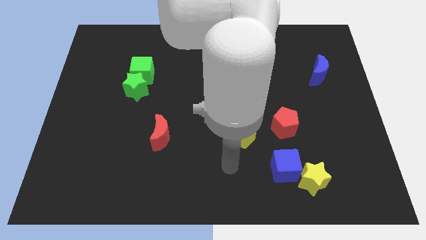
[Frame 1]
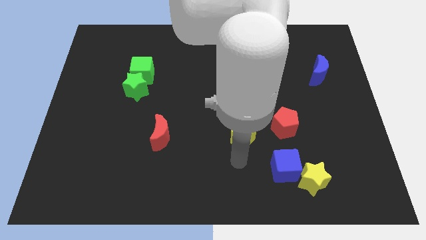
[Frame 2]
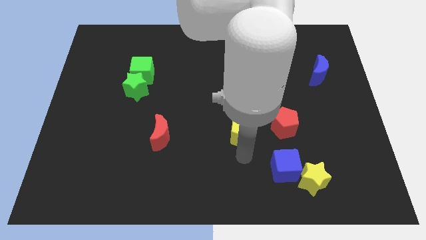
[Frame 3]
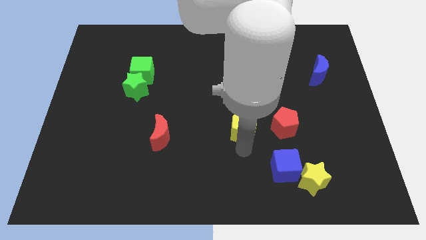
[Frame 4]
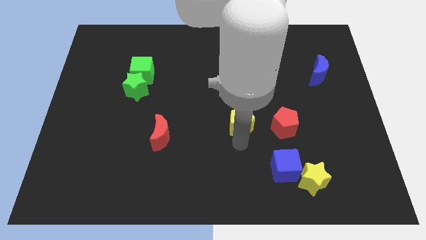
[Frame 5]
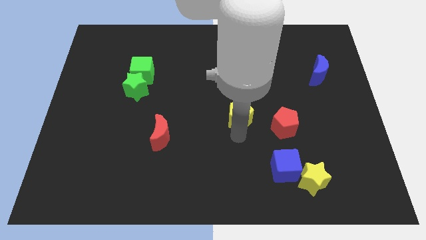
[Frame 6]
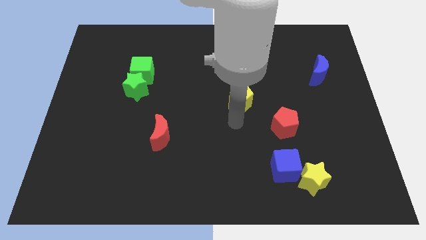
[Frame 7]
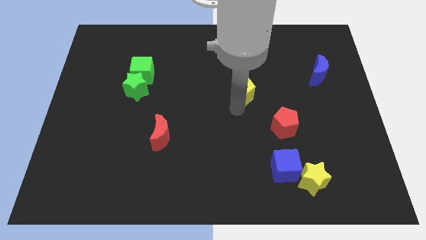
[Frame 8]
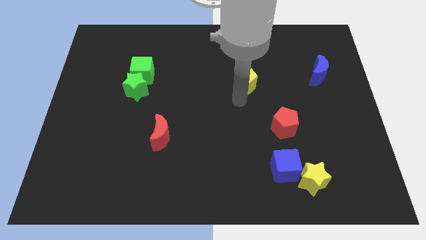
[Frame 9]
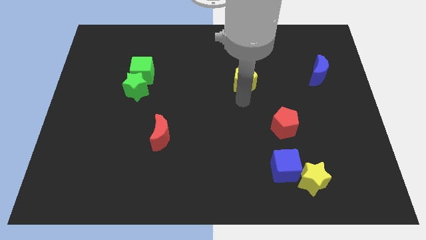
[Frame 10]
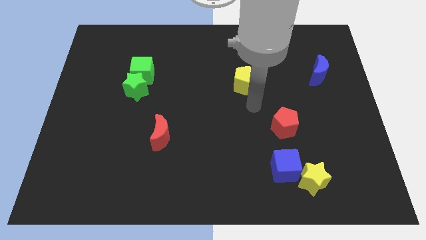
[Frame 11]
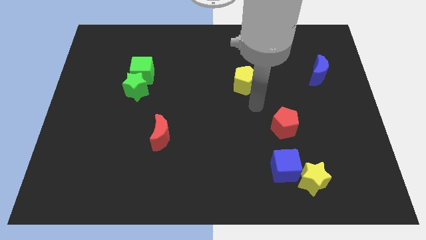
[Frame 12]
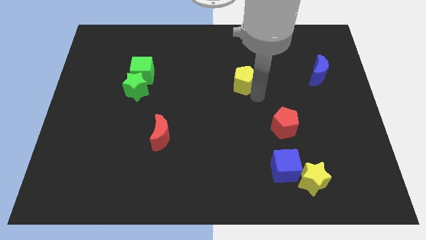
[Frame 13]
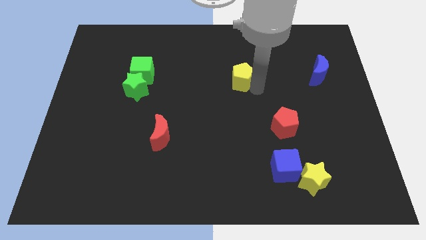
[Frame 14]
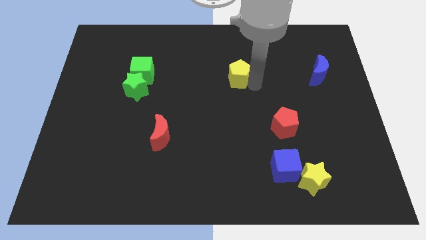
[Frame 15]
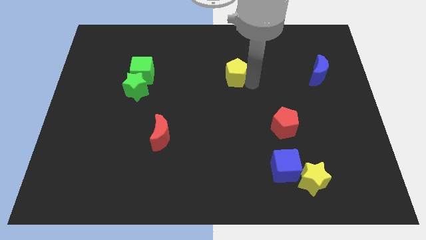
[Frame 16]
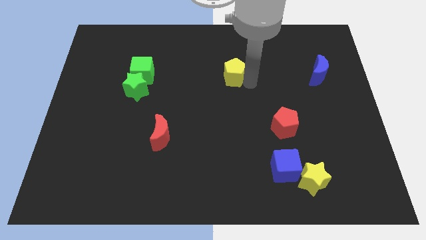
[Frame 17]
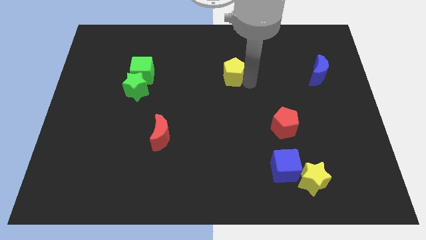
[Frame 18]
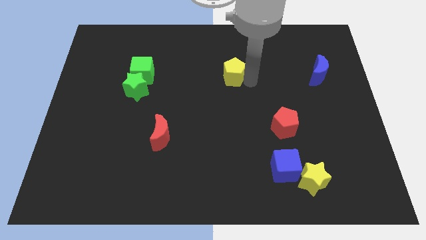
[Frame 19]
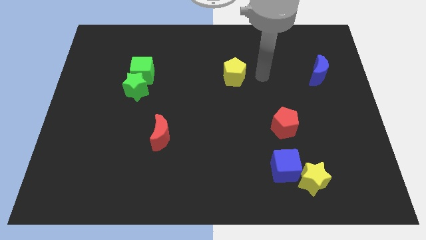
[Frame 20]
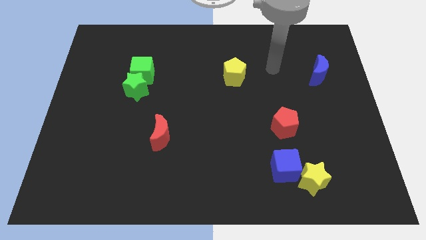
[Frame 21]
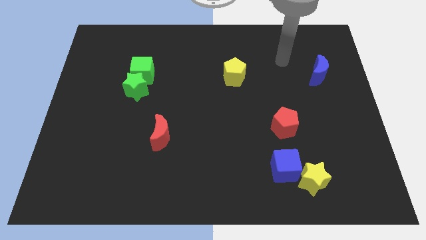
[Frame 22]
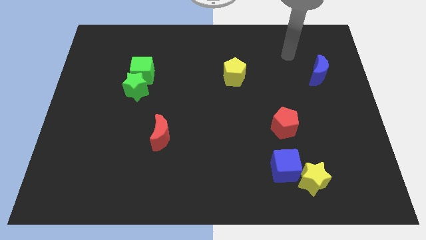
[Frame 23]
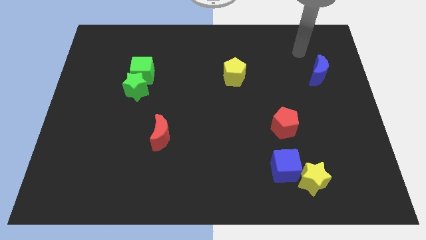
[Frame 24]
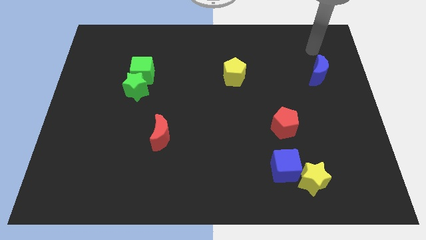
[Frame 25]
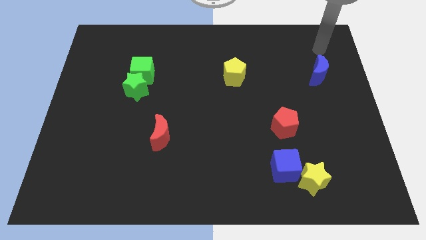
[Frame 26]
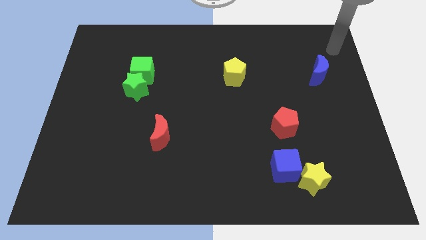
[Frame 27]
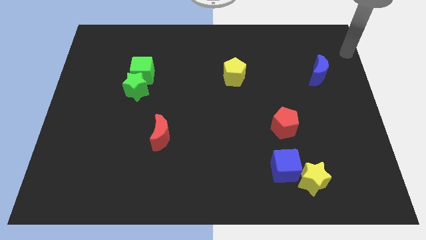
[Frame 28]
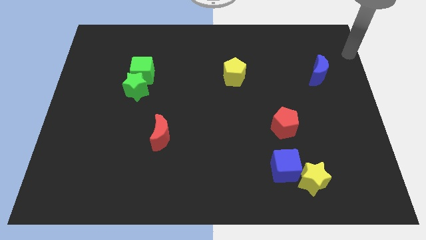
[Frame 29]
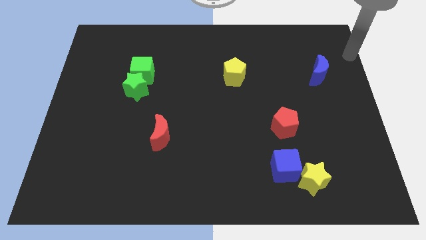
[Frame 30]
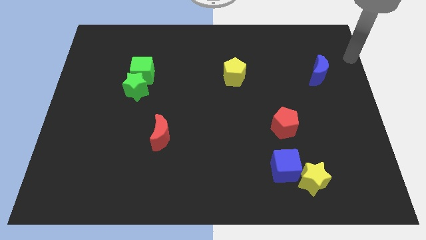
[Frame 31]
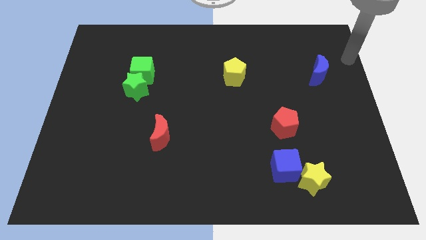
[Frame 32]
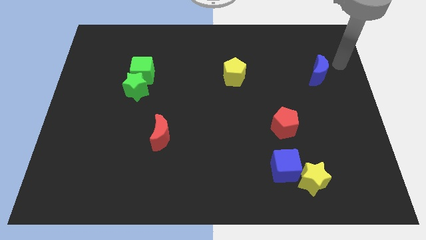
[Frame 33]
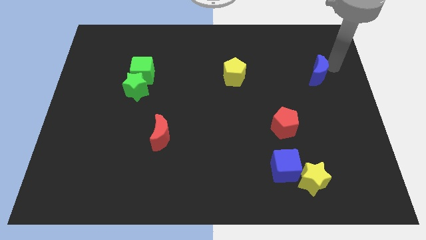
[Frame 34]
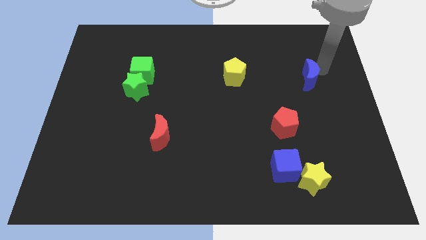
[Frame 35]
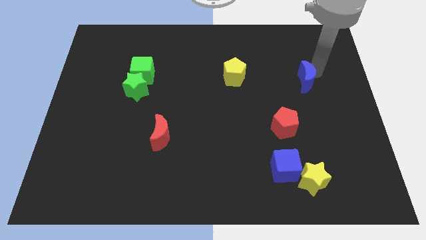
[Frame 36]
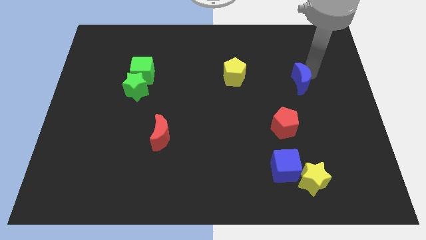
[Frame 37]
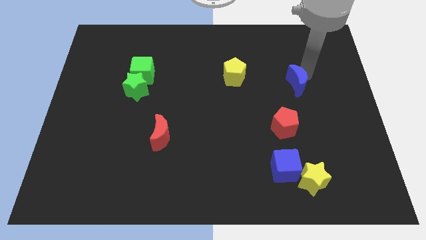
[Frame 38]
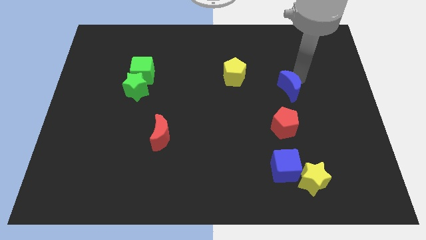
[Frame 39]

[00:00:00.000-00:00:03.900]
push the yellow pentagon to the top center of the board

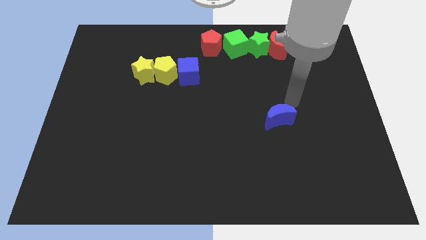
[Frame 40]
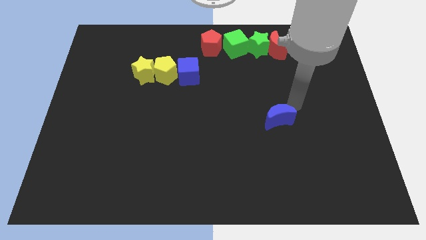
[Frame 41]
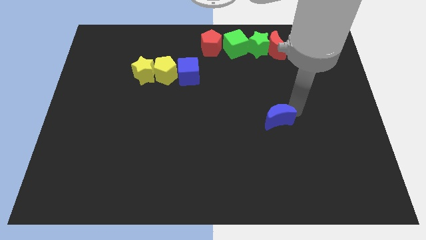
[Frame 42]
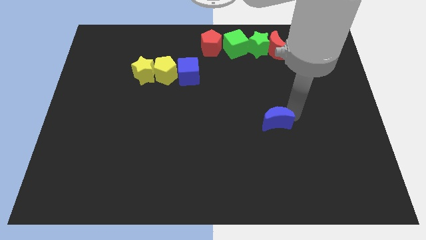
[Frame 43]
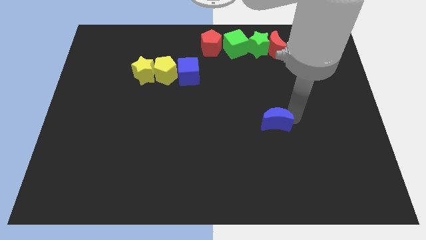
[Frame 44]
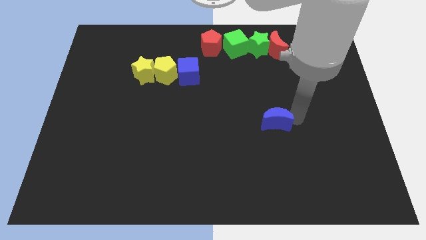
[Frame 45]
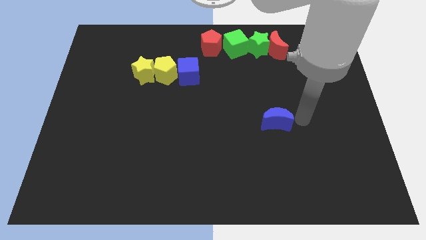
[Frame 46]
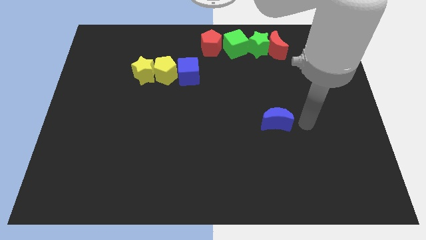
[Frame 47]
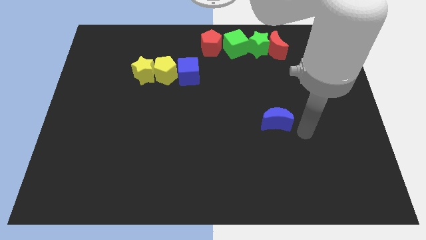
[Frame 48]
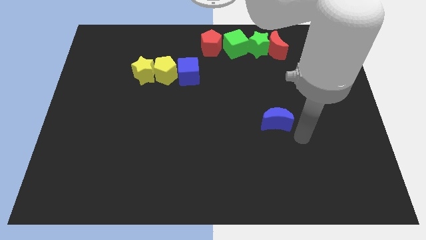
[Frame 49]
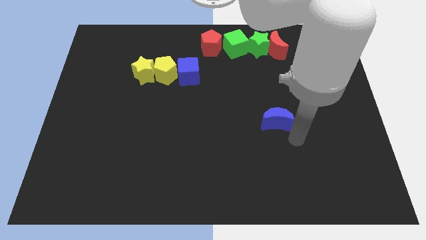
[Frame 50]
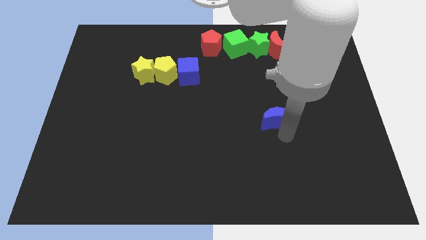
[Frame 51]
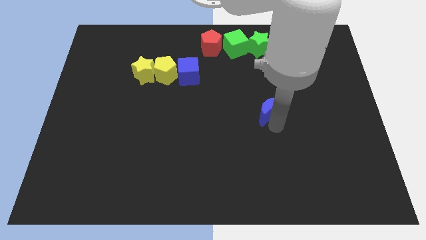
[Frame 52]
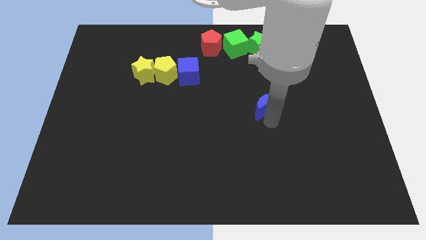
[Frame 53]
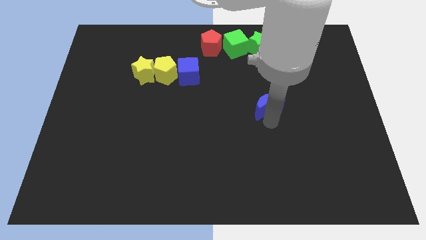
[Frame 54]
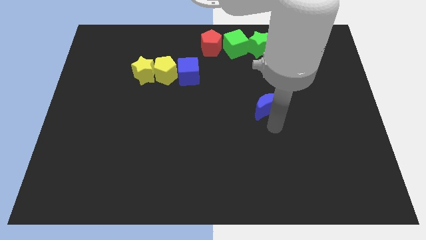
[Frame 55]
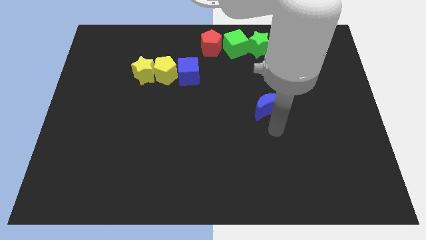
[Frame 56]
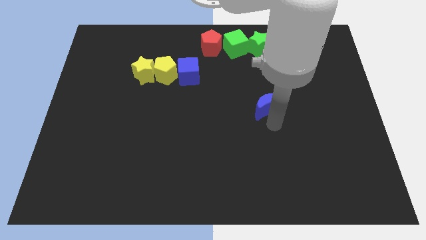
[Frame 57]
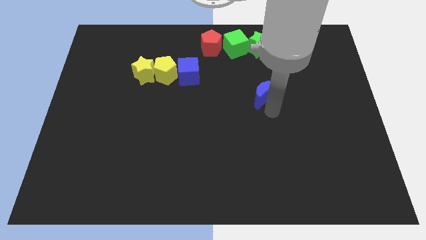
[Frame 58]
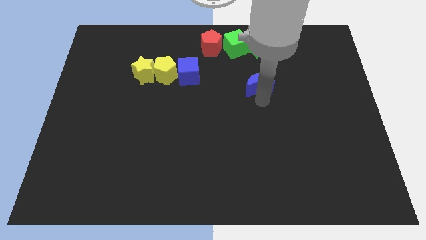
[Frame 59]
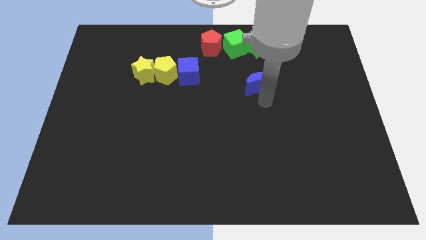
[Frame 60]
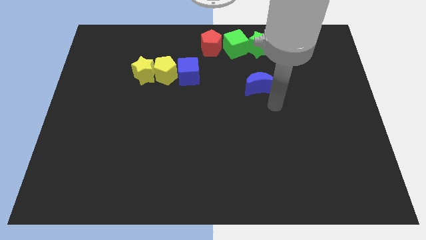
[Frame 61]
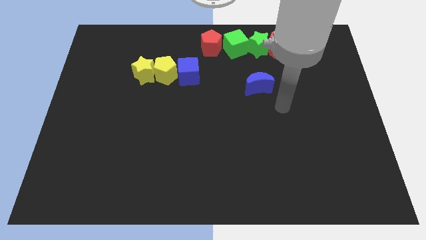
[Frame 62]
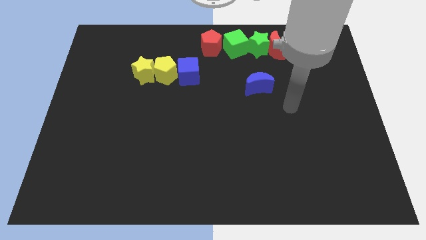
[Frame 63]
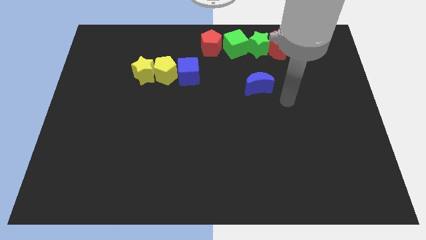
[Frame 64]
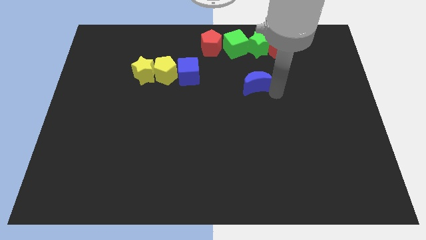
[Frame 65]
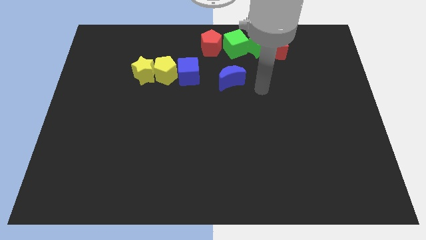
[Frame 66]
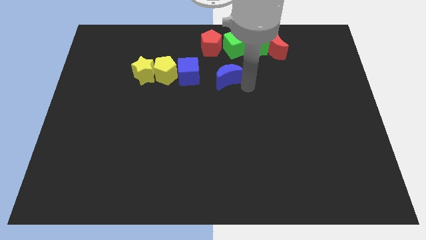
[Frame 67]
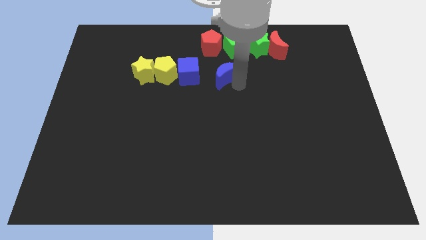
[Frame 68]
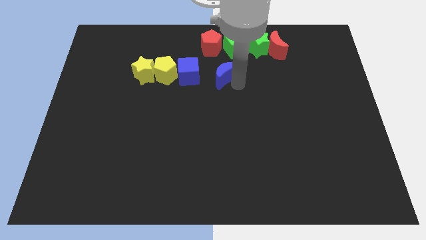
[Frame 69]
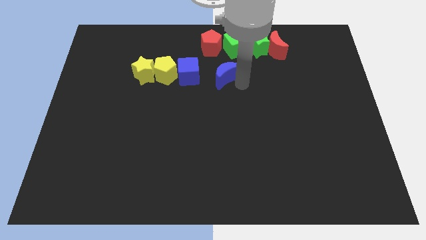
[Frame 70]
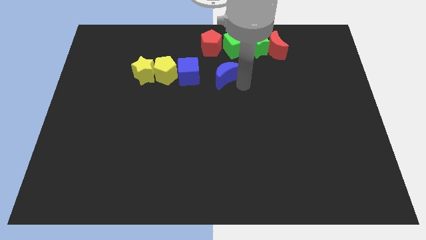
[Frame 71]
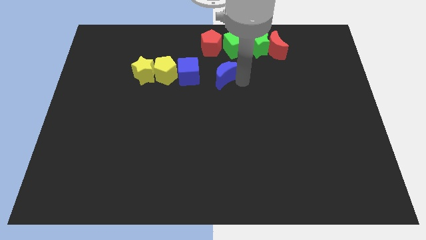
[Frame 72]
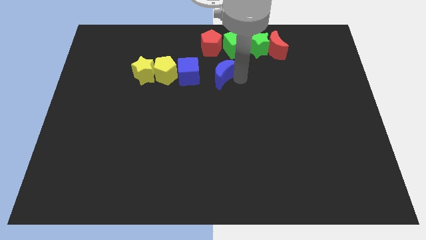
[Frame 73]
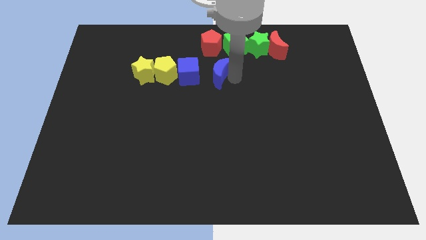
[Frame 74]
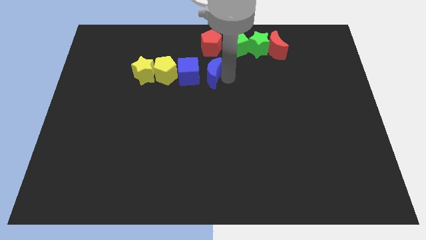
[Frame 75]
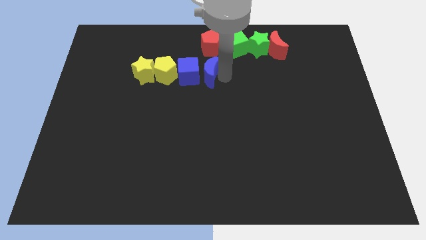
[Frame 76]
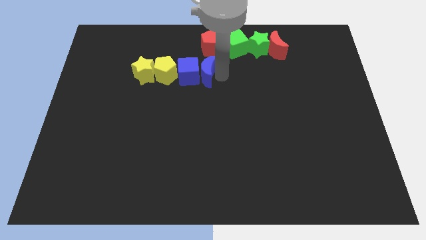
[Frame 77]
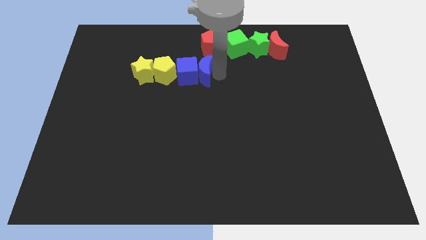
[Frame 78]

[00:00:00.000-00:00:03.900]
push the blue crescent to the right of the blue cube

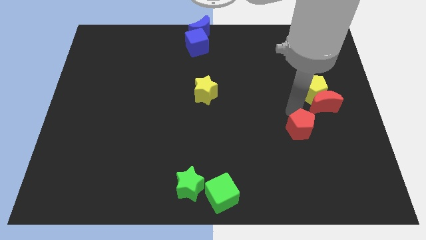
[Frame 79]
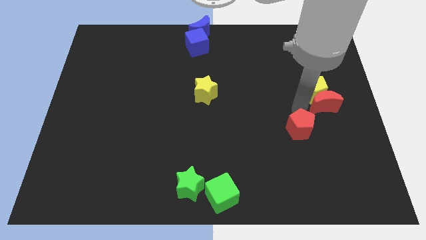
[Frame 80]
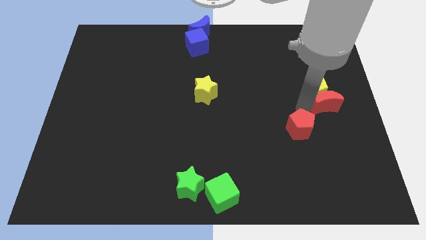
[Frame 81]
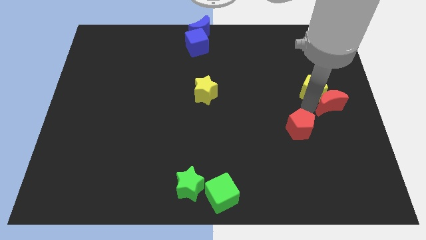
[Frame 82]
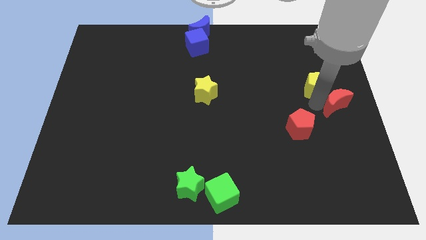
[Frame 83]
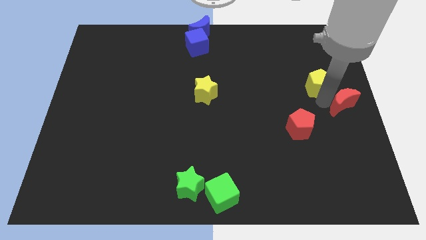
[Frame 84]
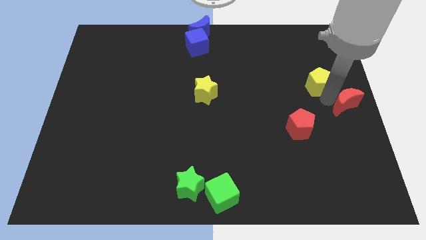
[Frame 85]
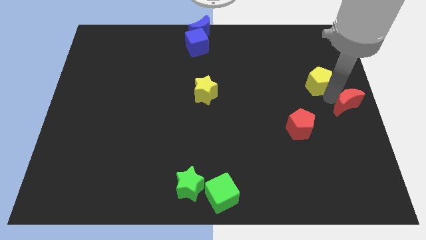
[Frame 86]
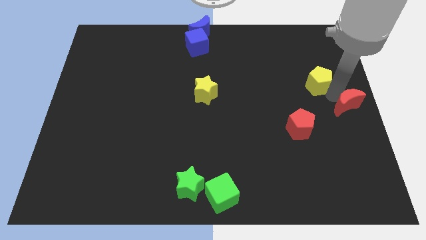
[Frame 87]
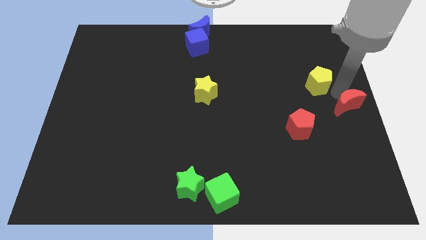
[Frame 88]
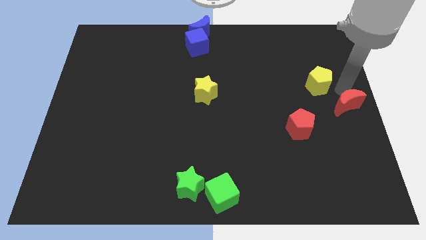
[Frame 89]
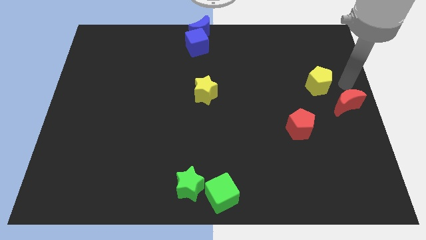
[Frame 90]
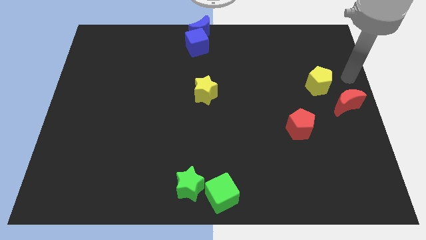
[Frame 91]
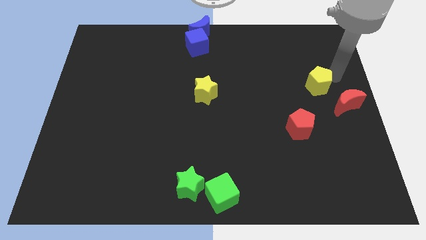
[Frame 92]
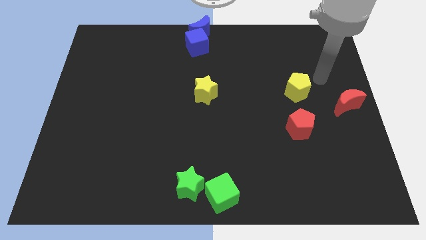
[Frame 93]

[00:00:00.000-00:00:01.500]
separate the red moon and the yellow pentagon
